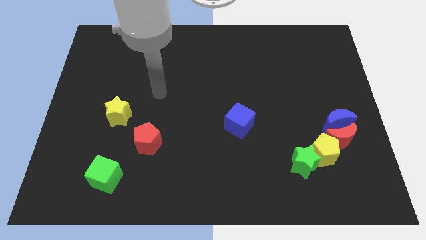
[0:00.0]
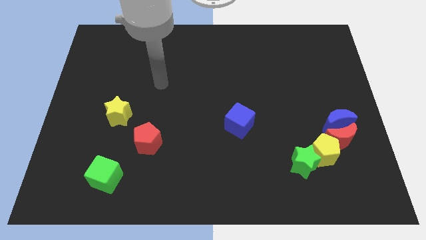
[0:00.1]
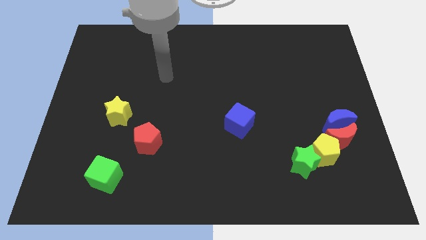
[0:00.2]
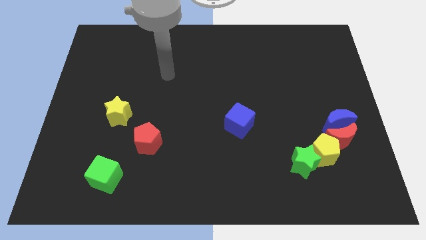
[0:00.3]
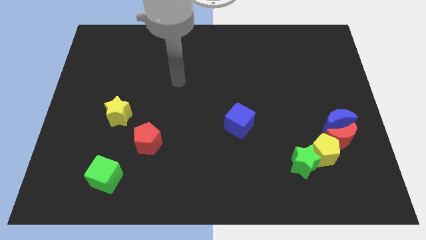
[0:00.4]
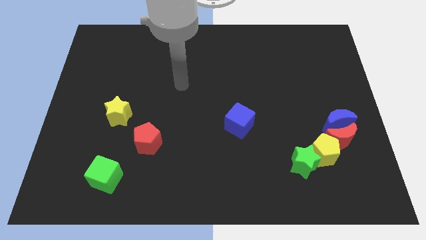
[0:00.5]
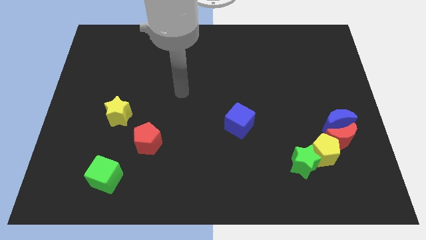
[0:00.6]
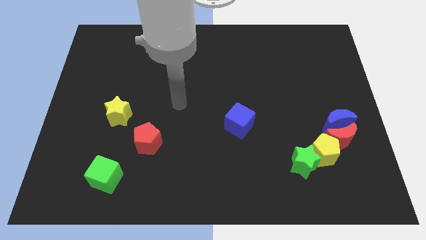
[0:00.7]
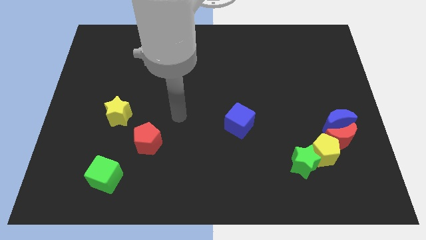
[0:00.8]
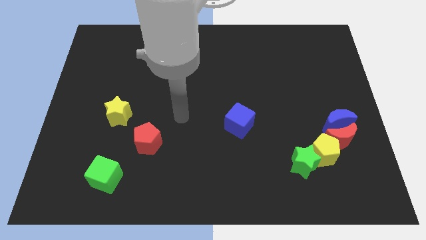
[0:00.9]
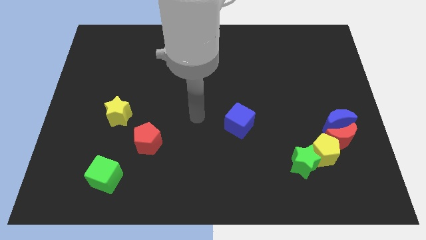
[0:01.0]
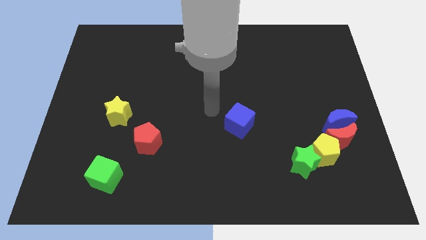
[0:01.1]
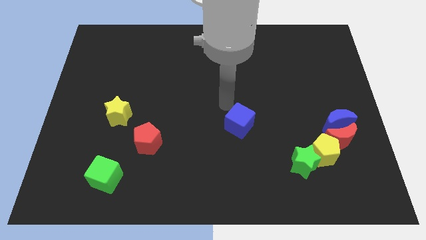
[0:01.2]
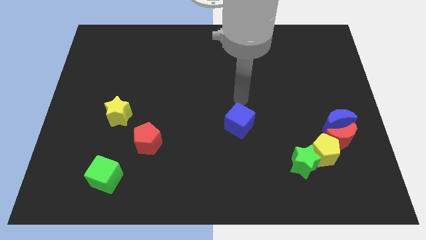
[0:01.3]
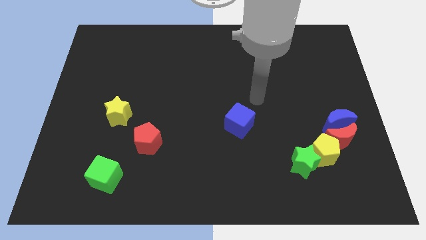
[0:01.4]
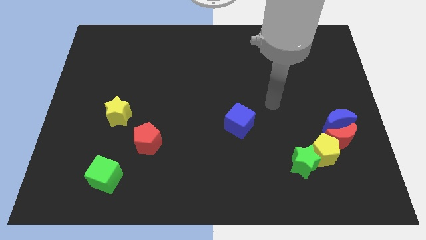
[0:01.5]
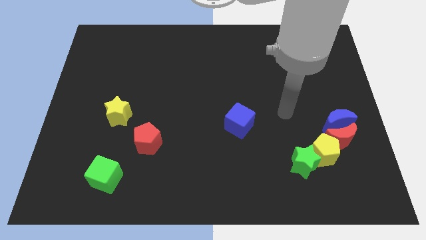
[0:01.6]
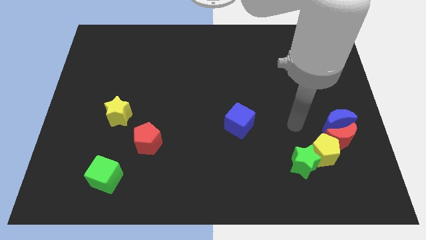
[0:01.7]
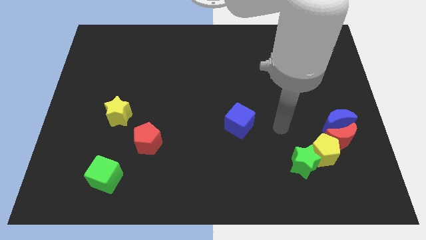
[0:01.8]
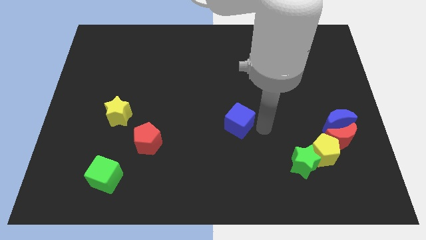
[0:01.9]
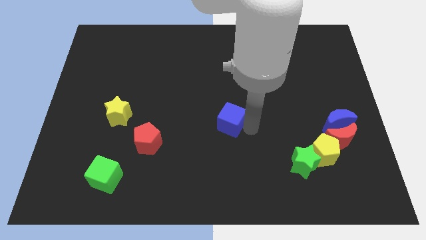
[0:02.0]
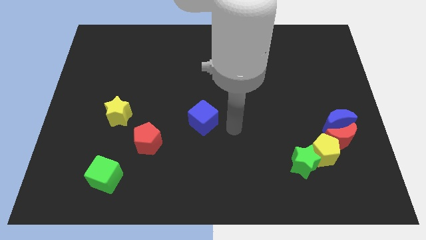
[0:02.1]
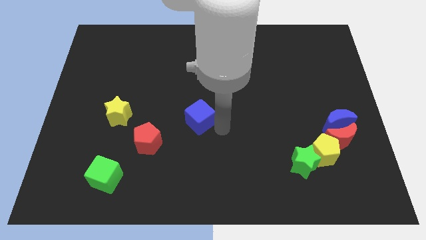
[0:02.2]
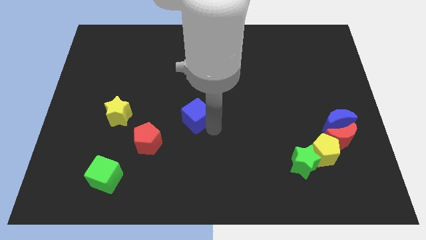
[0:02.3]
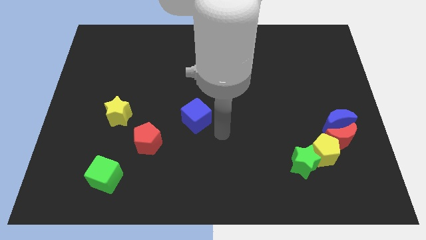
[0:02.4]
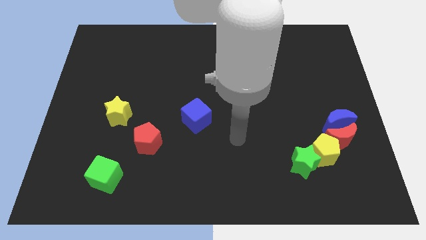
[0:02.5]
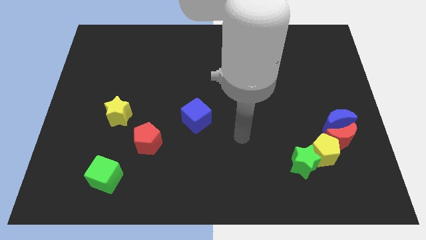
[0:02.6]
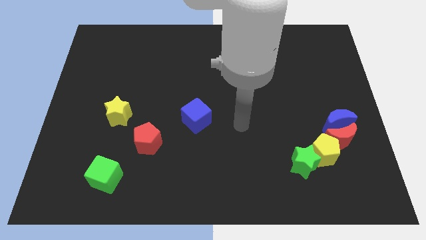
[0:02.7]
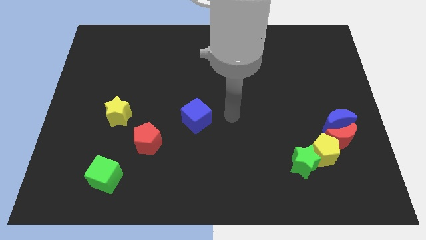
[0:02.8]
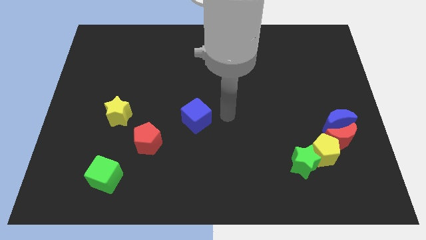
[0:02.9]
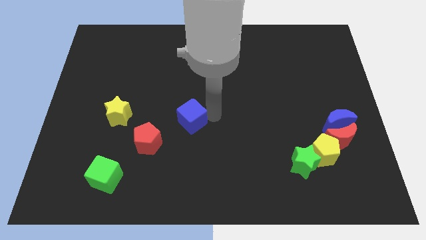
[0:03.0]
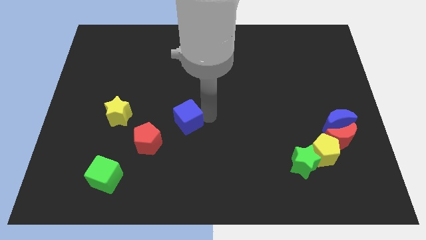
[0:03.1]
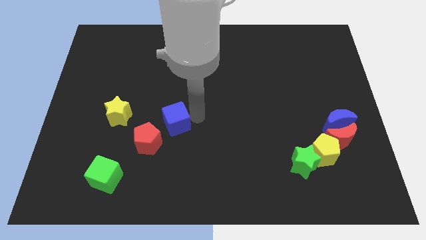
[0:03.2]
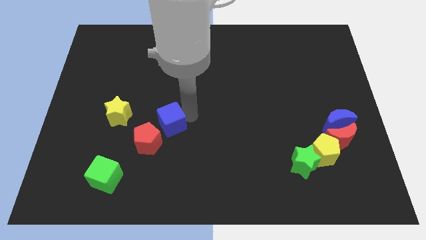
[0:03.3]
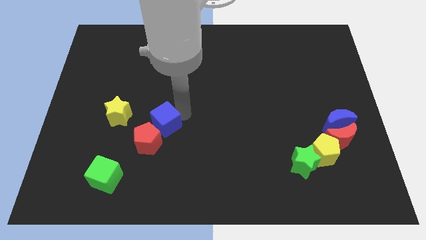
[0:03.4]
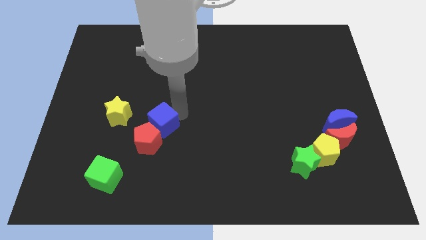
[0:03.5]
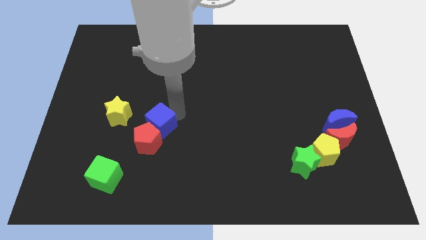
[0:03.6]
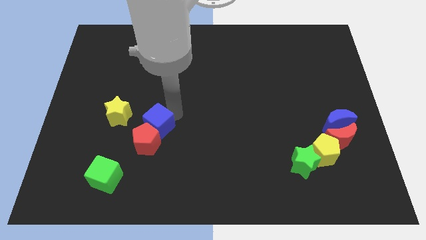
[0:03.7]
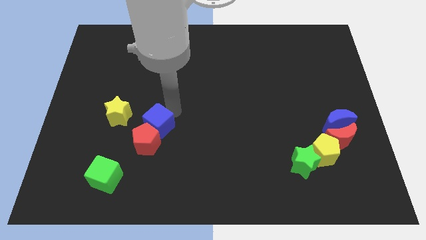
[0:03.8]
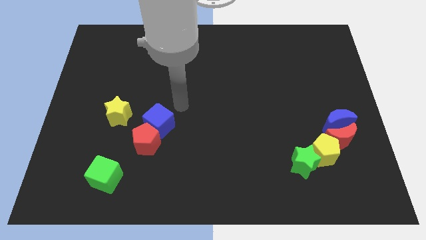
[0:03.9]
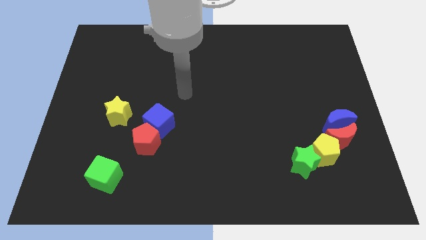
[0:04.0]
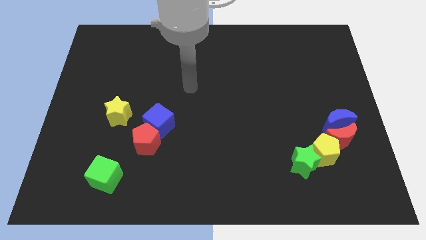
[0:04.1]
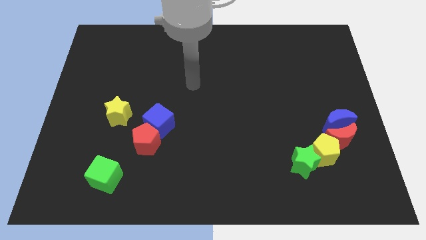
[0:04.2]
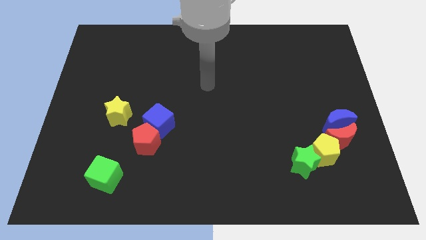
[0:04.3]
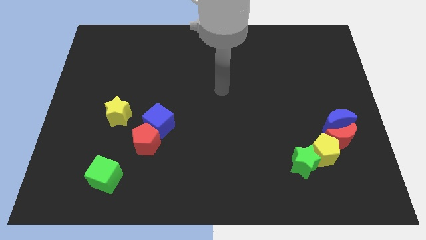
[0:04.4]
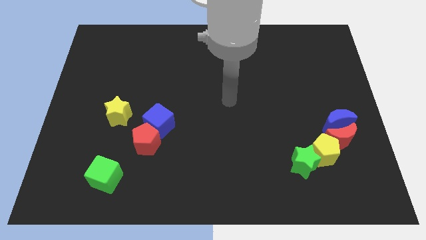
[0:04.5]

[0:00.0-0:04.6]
move blue cube towards red pentagon

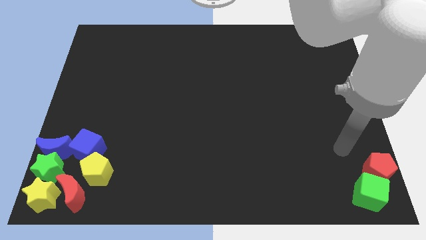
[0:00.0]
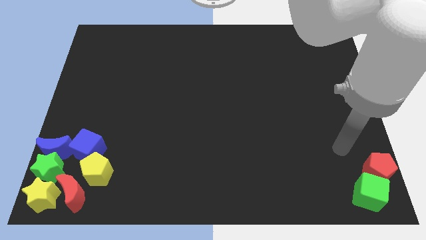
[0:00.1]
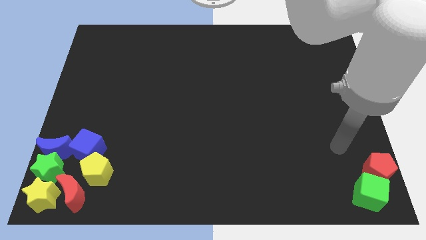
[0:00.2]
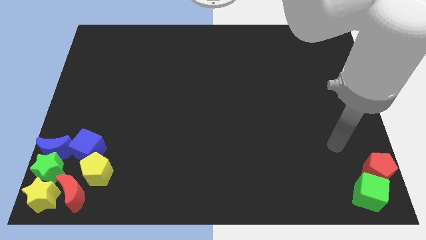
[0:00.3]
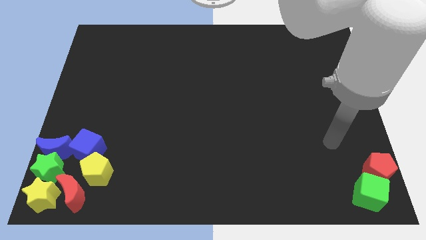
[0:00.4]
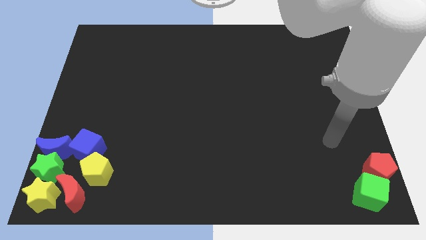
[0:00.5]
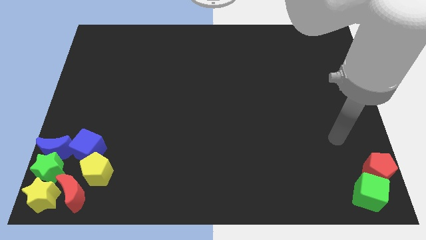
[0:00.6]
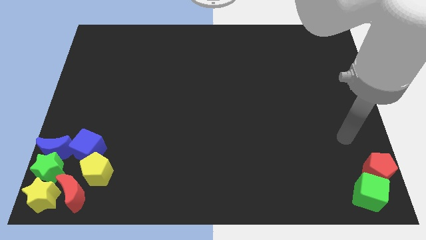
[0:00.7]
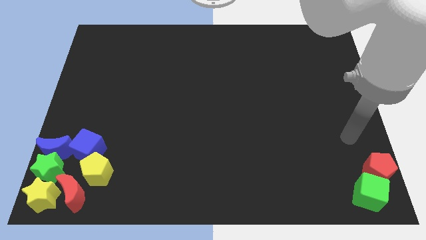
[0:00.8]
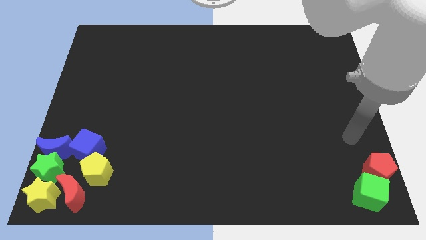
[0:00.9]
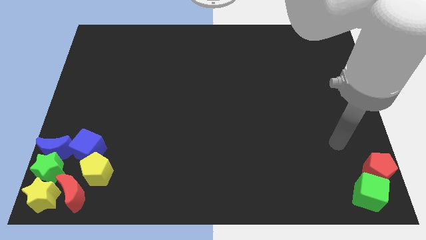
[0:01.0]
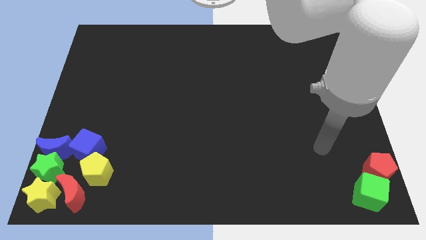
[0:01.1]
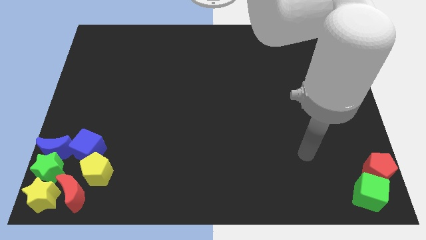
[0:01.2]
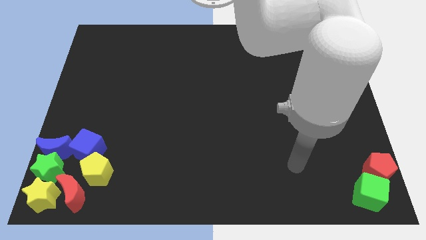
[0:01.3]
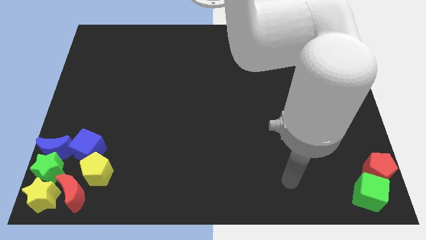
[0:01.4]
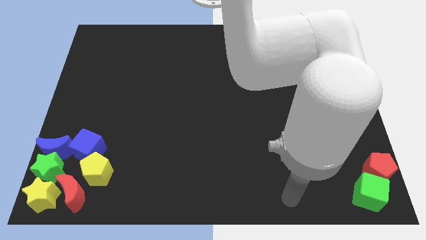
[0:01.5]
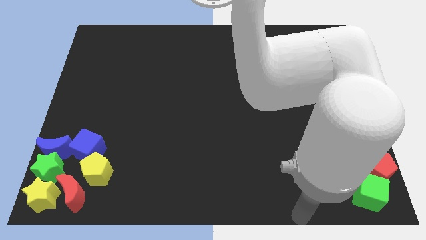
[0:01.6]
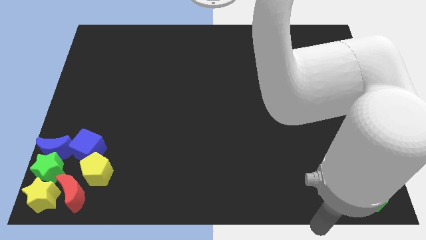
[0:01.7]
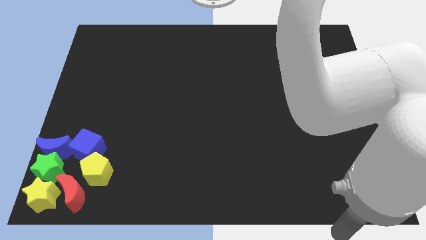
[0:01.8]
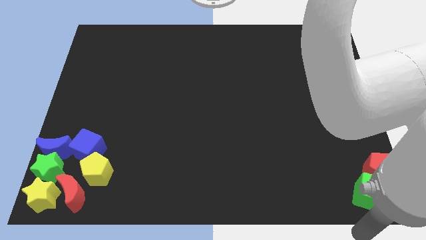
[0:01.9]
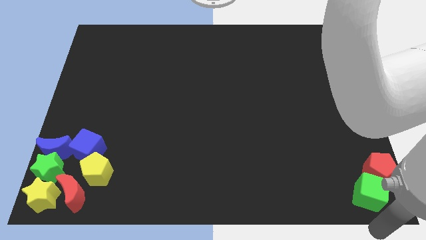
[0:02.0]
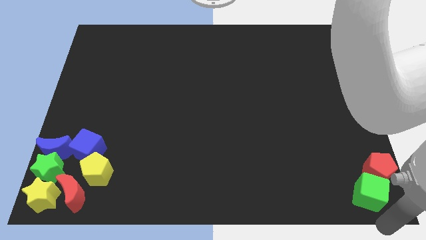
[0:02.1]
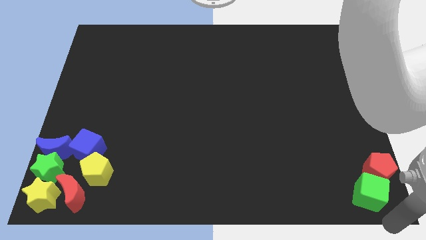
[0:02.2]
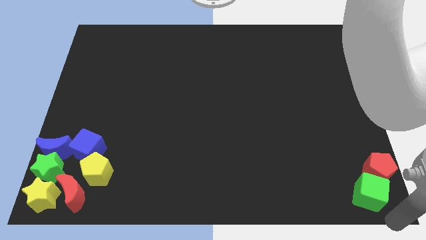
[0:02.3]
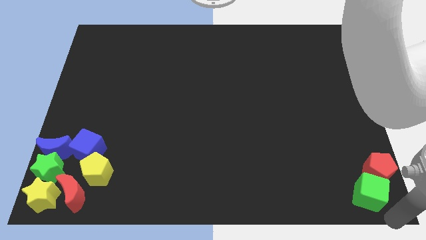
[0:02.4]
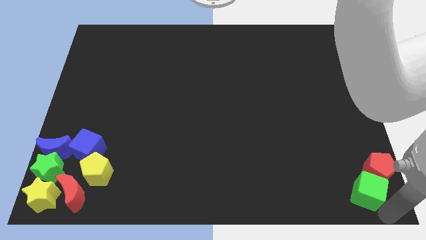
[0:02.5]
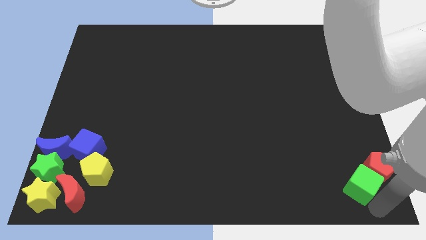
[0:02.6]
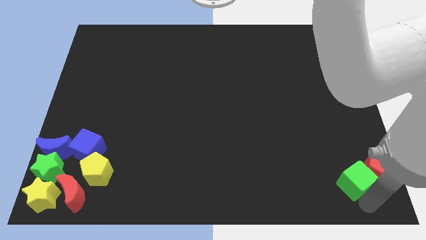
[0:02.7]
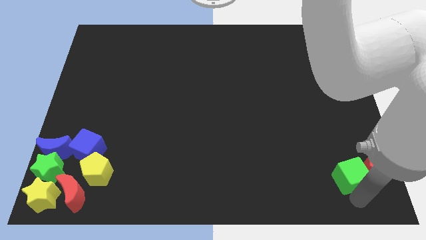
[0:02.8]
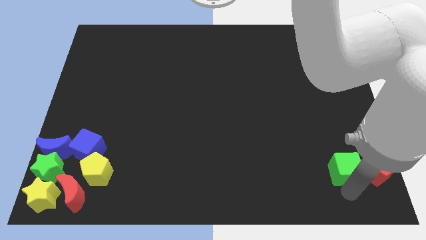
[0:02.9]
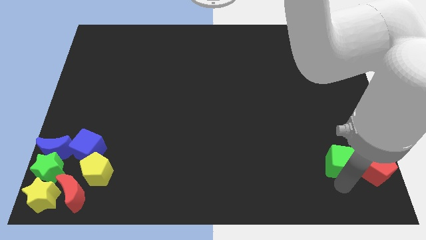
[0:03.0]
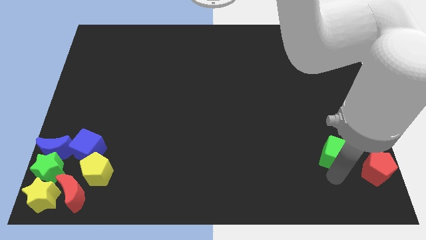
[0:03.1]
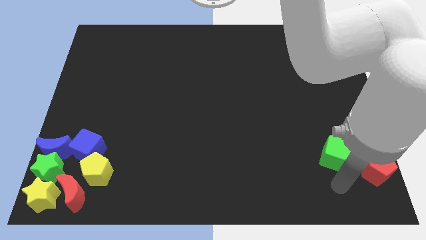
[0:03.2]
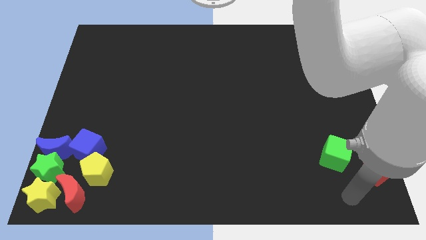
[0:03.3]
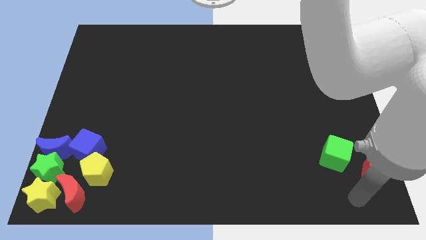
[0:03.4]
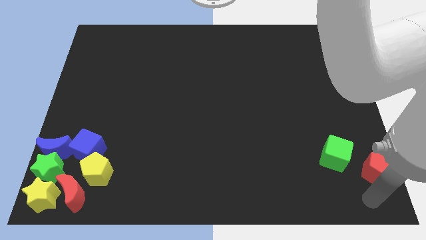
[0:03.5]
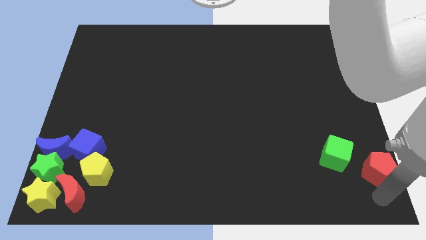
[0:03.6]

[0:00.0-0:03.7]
push the green cube slightly upwards

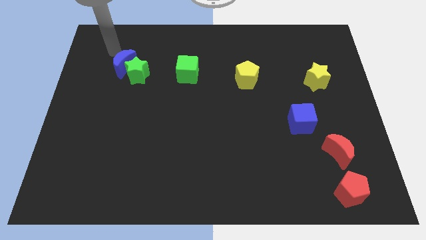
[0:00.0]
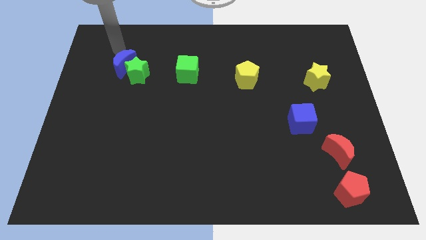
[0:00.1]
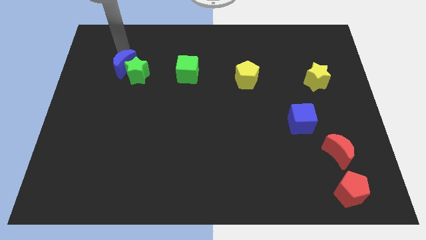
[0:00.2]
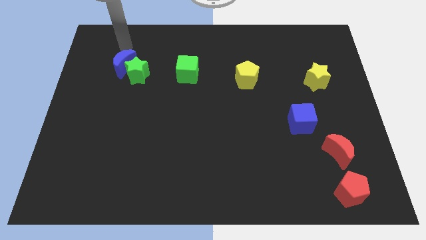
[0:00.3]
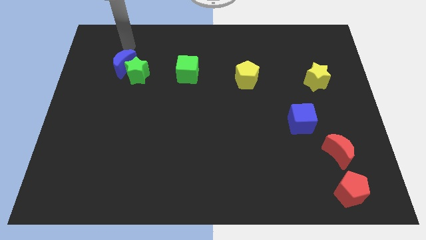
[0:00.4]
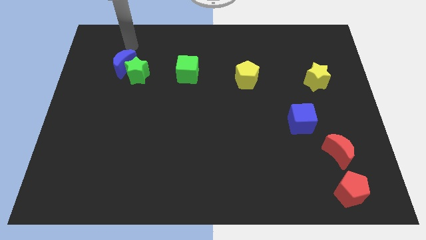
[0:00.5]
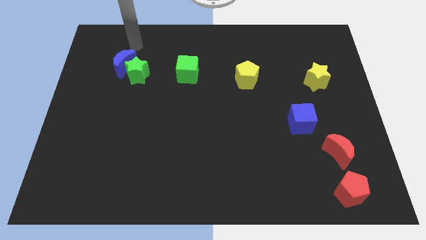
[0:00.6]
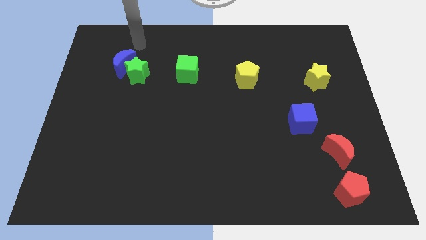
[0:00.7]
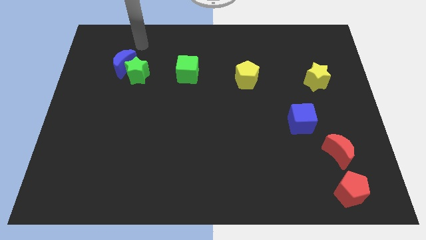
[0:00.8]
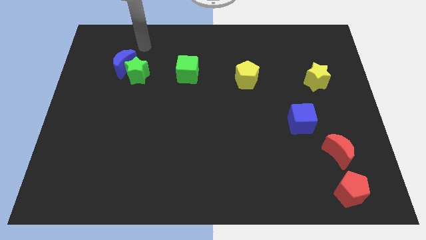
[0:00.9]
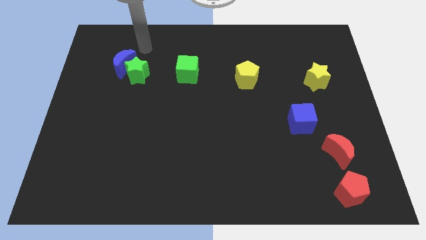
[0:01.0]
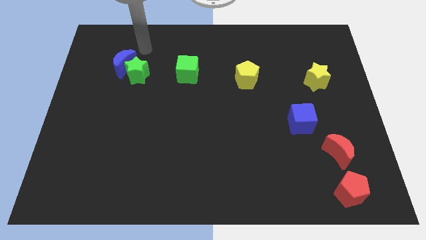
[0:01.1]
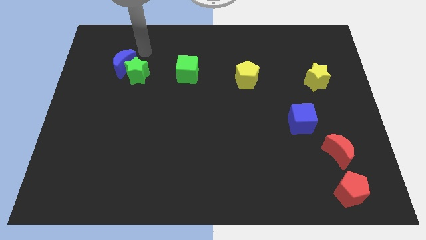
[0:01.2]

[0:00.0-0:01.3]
put your arm at the top side of the green star
